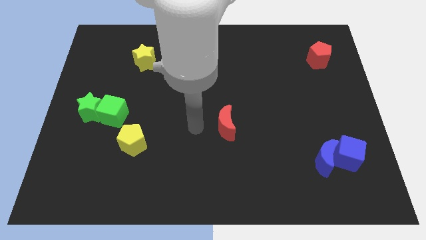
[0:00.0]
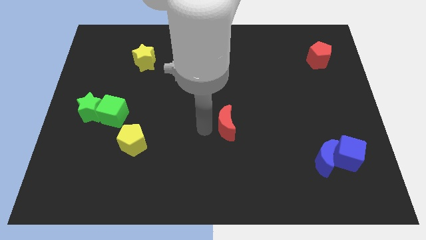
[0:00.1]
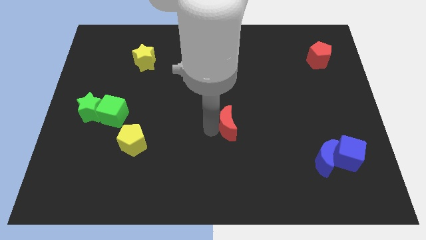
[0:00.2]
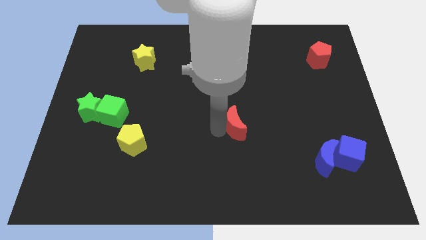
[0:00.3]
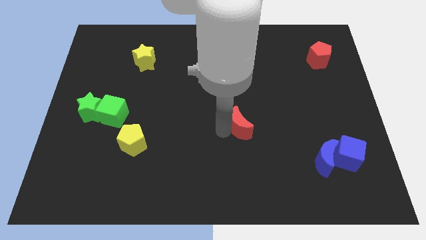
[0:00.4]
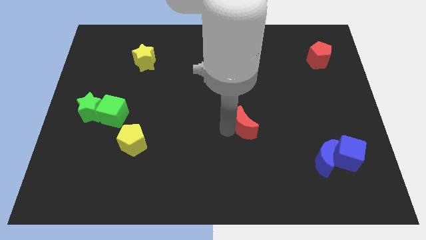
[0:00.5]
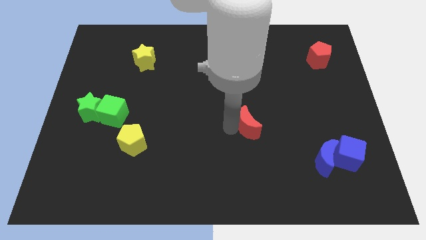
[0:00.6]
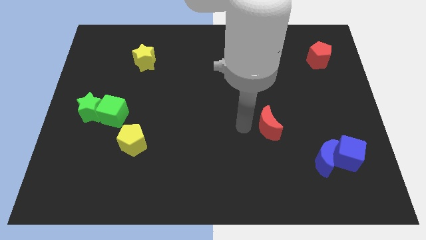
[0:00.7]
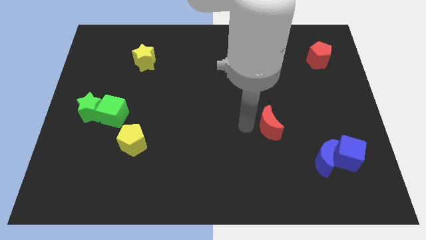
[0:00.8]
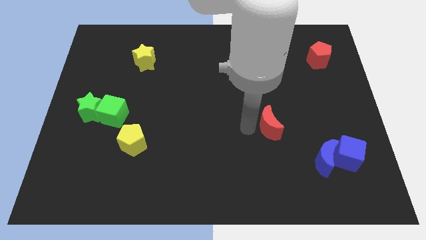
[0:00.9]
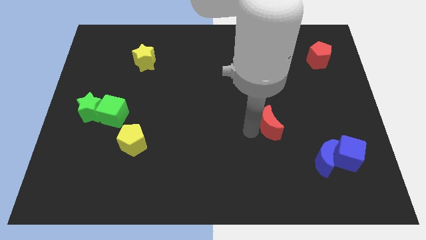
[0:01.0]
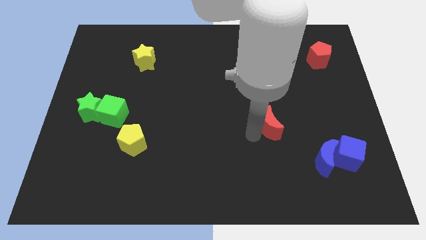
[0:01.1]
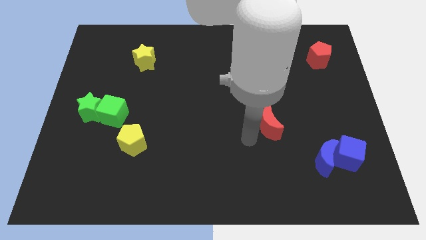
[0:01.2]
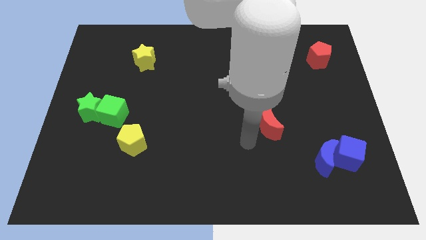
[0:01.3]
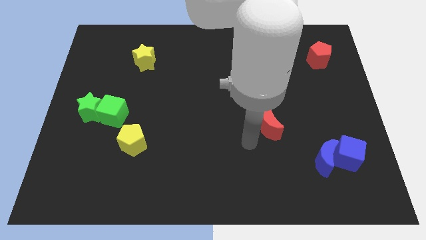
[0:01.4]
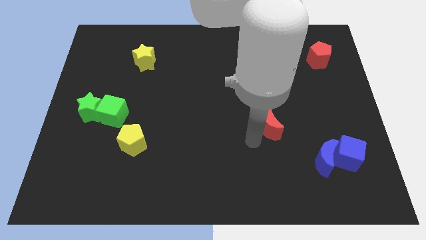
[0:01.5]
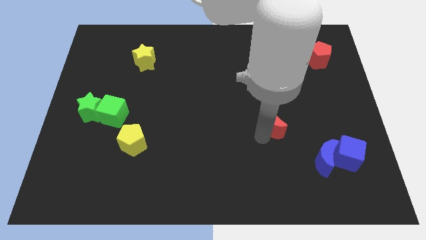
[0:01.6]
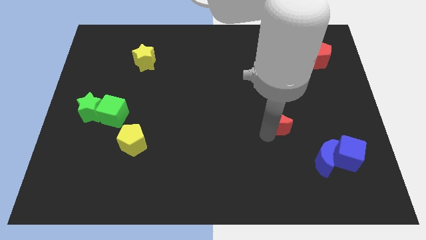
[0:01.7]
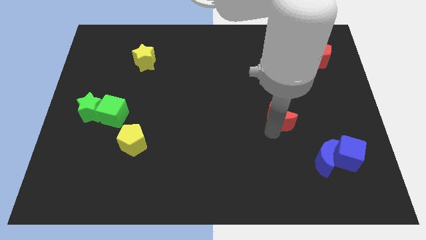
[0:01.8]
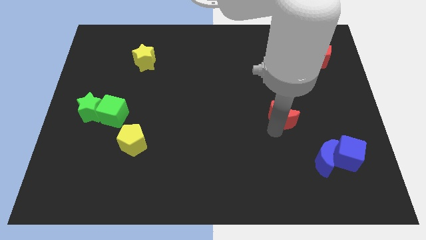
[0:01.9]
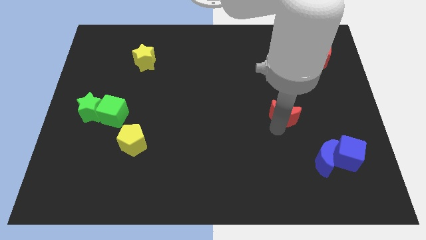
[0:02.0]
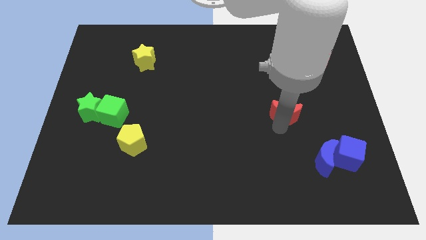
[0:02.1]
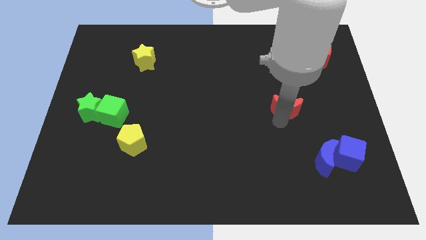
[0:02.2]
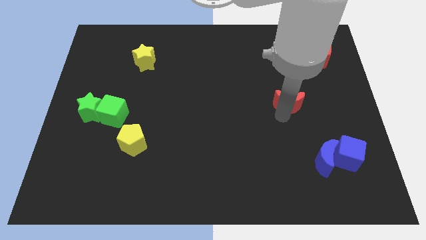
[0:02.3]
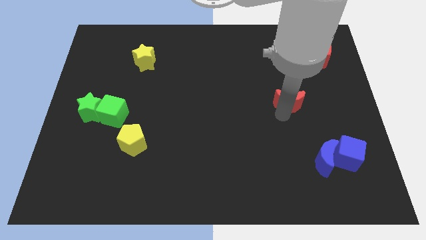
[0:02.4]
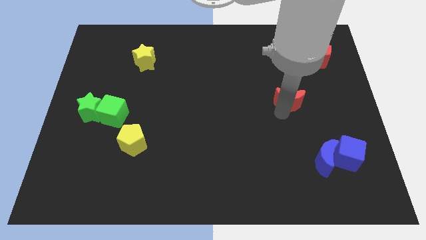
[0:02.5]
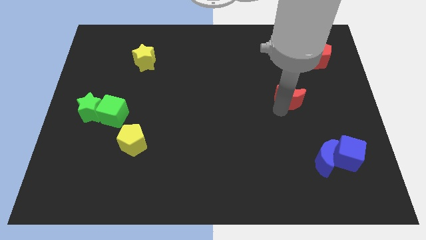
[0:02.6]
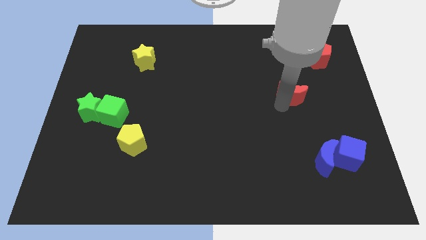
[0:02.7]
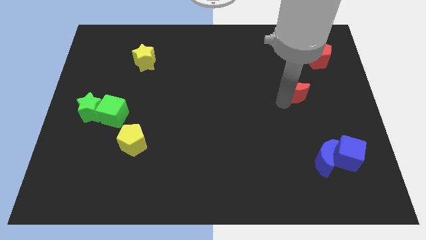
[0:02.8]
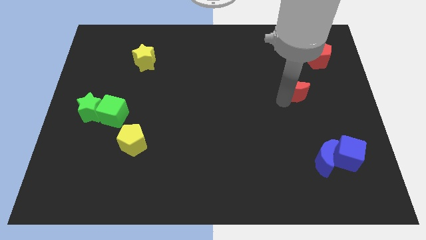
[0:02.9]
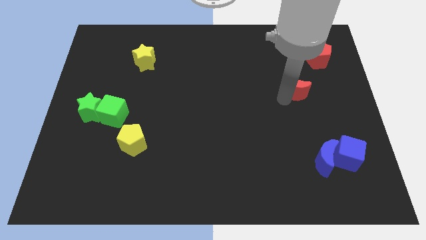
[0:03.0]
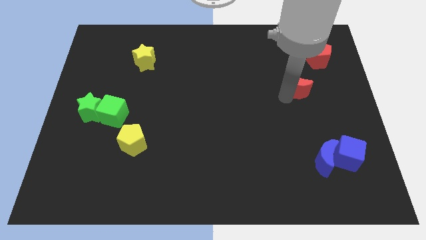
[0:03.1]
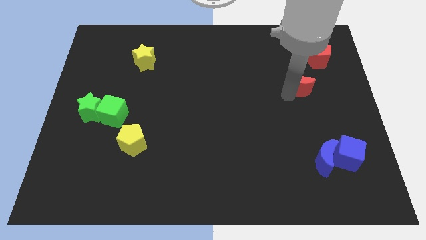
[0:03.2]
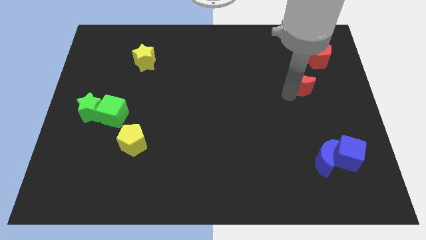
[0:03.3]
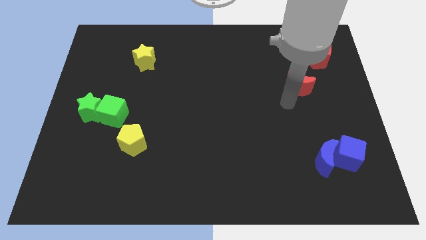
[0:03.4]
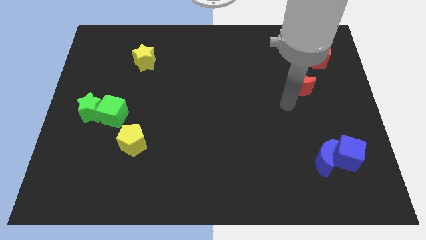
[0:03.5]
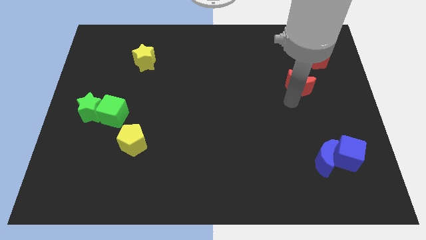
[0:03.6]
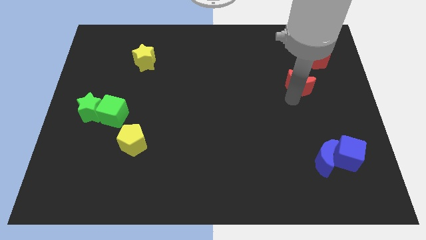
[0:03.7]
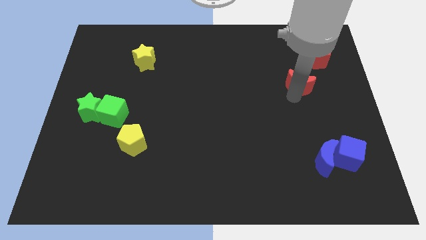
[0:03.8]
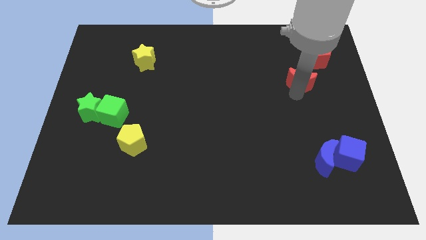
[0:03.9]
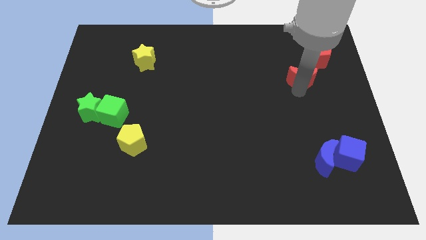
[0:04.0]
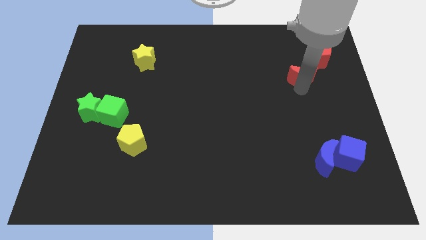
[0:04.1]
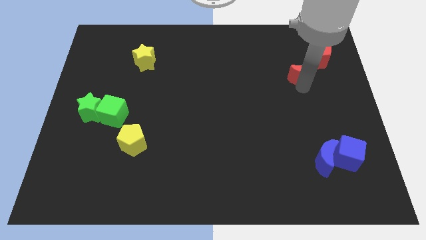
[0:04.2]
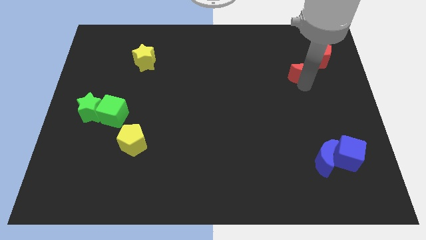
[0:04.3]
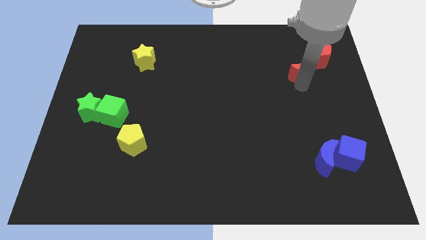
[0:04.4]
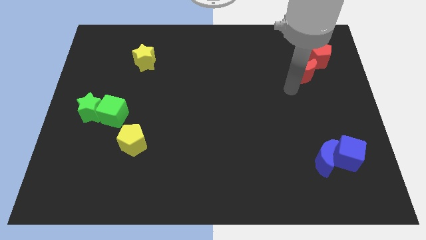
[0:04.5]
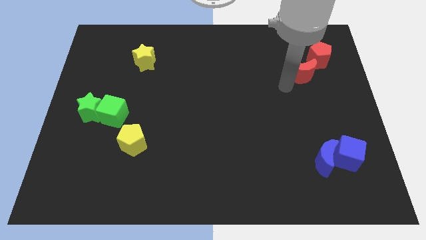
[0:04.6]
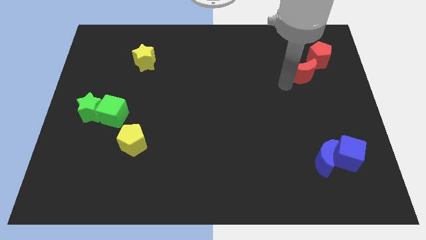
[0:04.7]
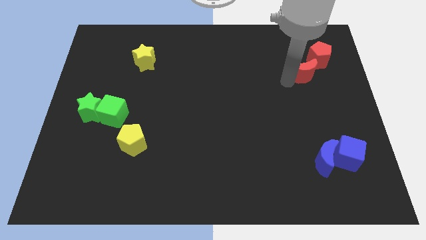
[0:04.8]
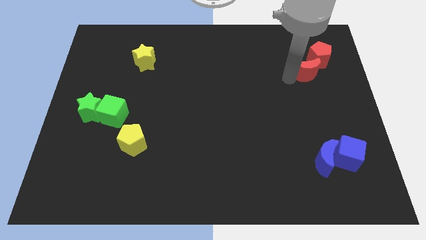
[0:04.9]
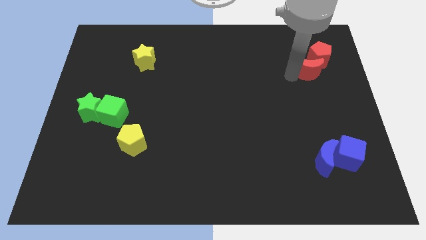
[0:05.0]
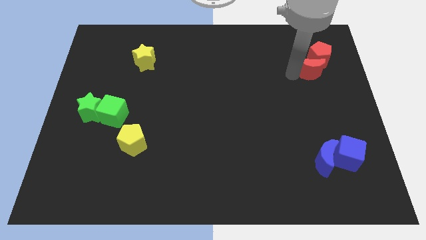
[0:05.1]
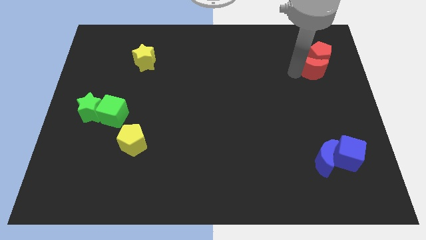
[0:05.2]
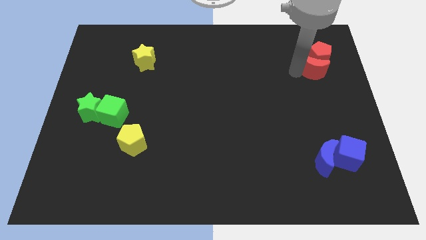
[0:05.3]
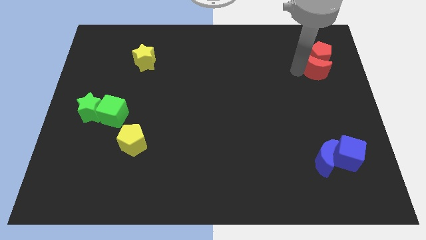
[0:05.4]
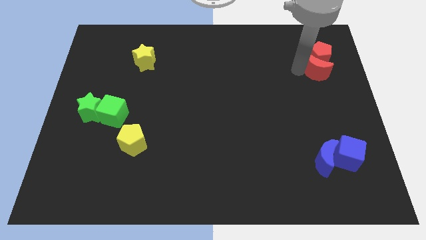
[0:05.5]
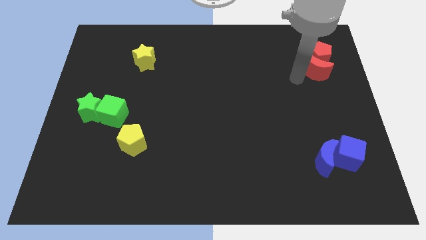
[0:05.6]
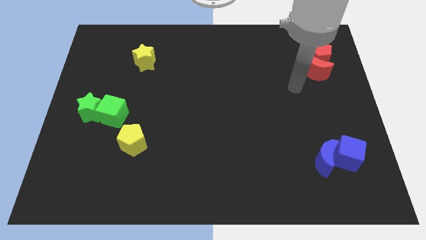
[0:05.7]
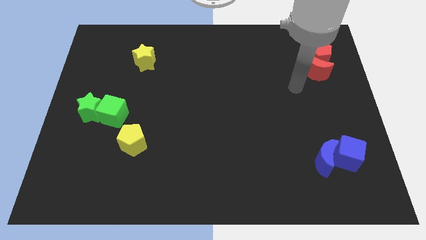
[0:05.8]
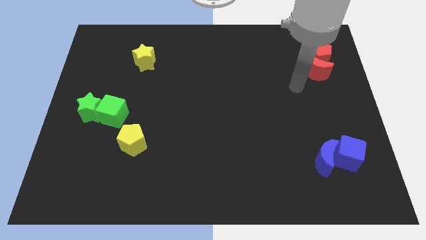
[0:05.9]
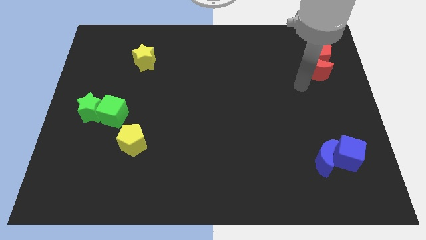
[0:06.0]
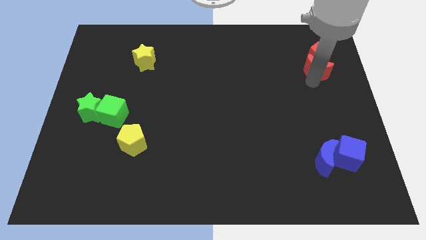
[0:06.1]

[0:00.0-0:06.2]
place the red moon below the red pentagon

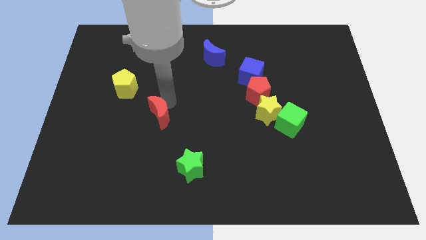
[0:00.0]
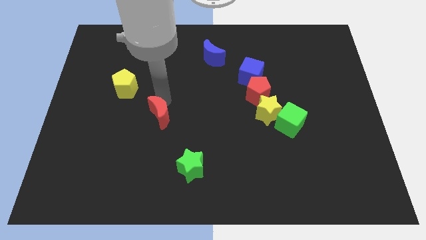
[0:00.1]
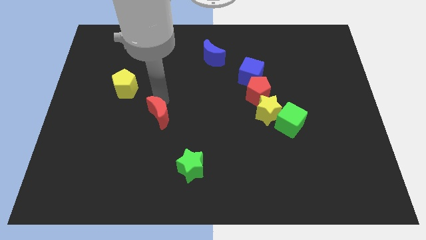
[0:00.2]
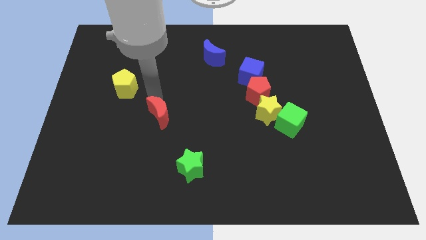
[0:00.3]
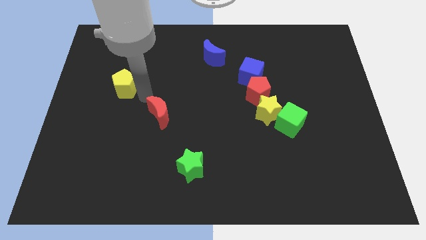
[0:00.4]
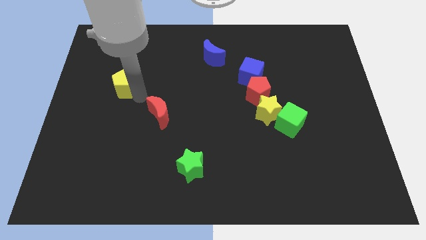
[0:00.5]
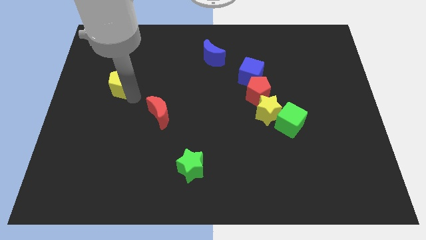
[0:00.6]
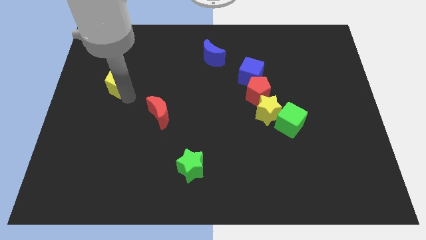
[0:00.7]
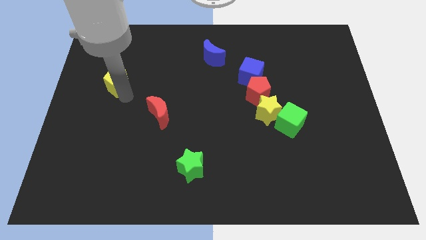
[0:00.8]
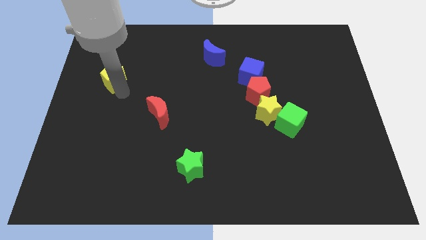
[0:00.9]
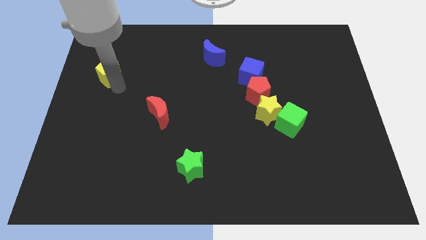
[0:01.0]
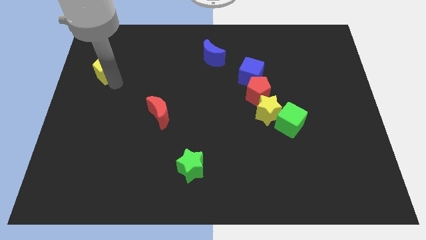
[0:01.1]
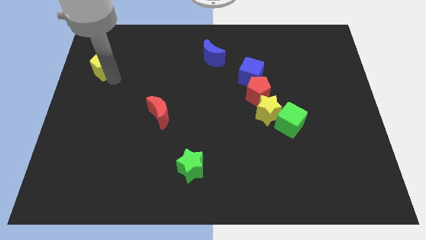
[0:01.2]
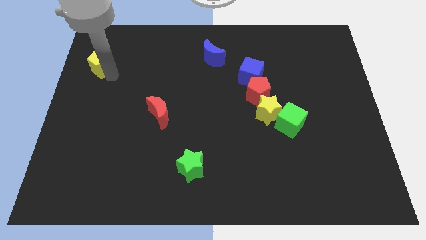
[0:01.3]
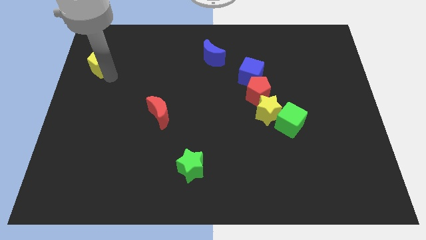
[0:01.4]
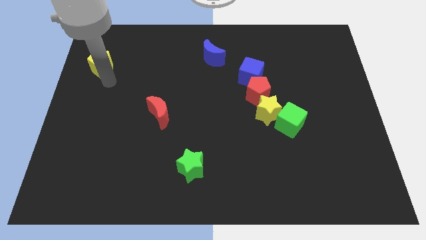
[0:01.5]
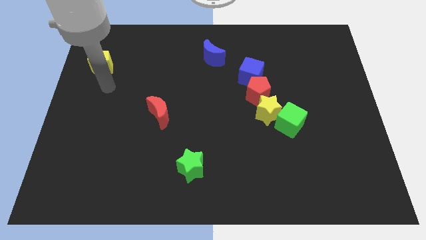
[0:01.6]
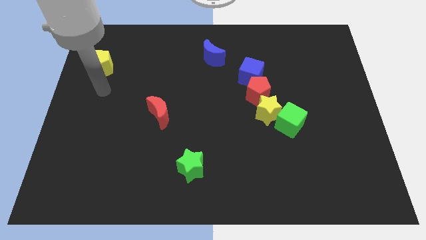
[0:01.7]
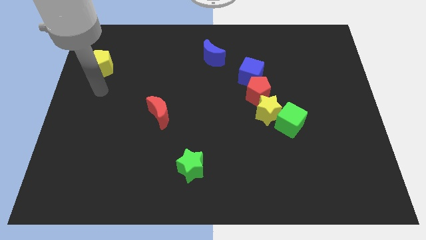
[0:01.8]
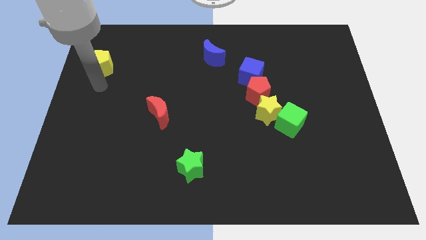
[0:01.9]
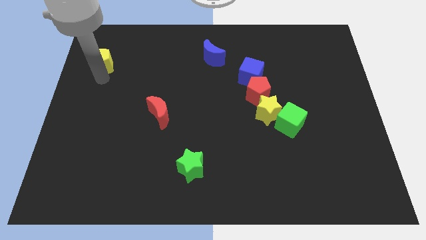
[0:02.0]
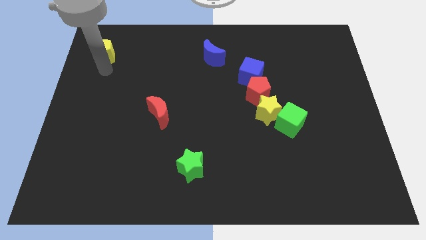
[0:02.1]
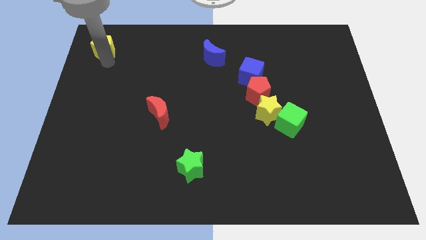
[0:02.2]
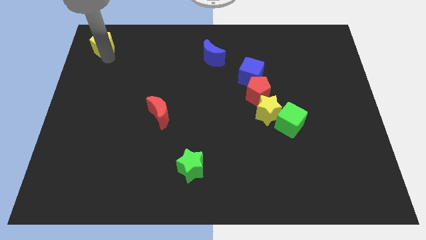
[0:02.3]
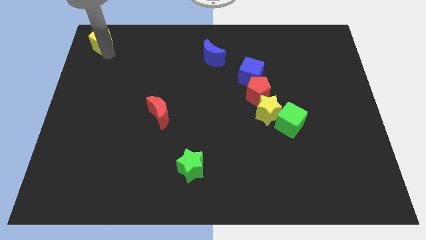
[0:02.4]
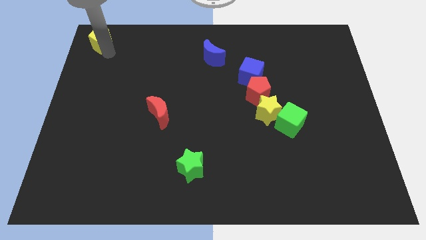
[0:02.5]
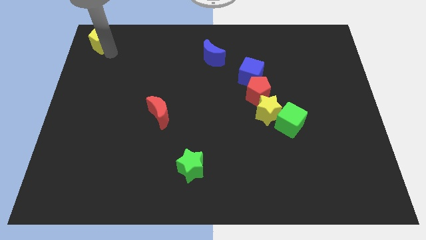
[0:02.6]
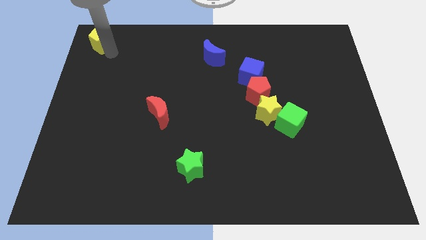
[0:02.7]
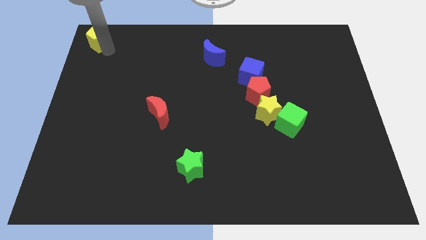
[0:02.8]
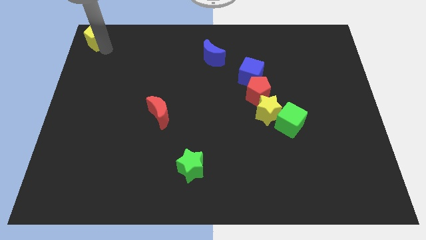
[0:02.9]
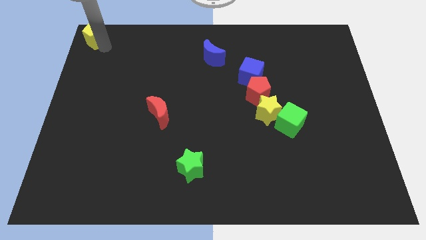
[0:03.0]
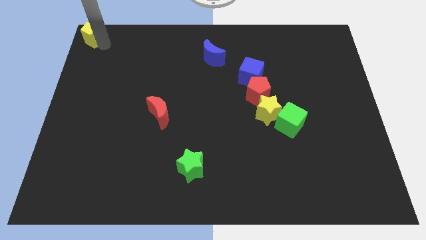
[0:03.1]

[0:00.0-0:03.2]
move yellow pentagon at the top left
